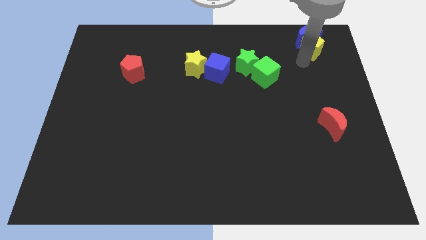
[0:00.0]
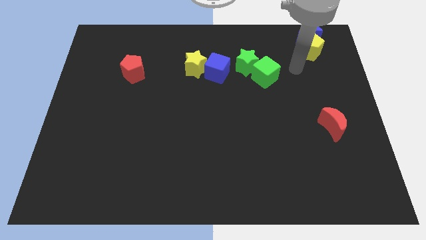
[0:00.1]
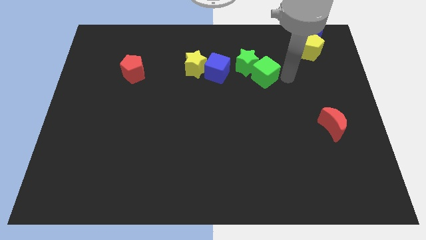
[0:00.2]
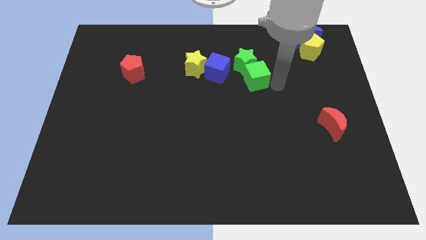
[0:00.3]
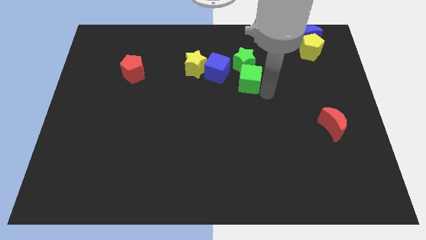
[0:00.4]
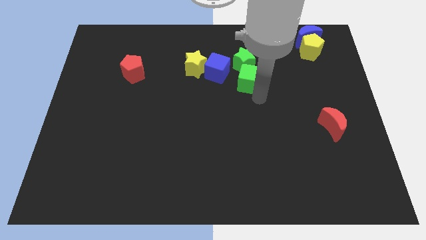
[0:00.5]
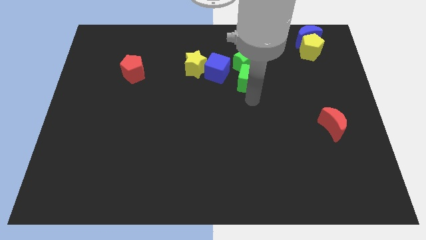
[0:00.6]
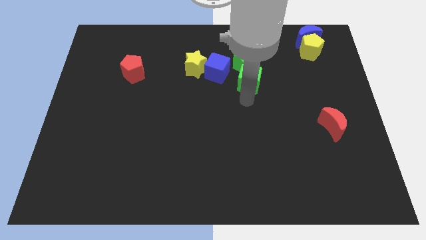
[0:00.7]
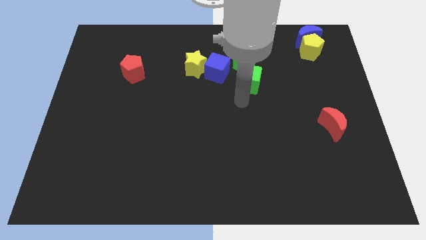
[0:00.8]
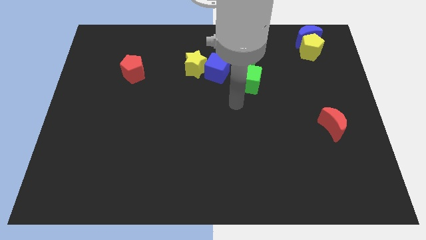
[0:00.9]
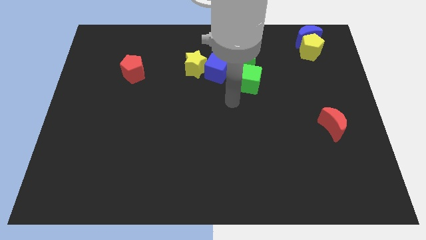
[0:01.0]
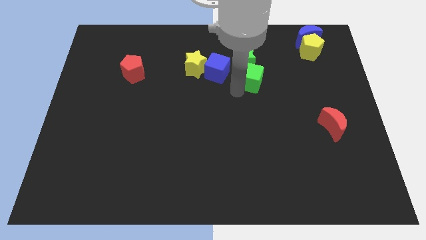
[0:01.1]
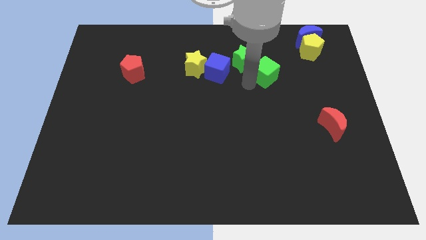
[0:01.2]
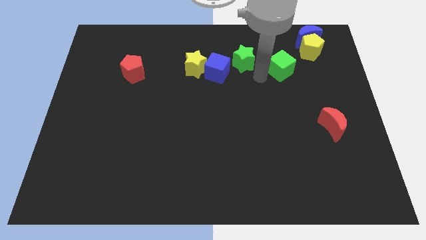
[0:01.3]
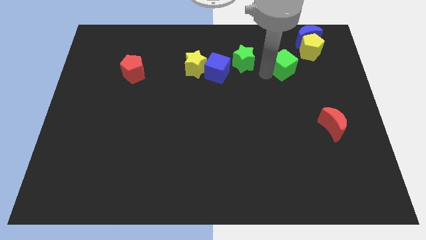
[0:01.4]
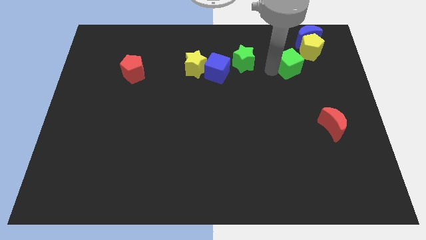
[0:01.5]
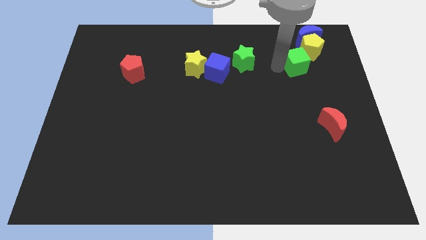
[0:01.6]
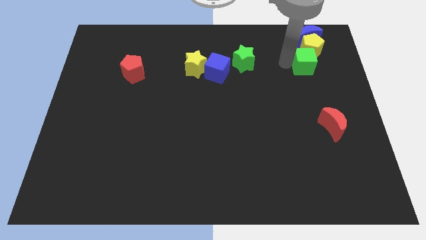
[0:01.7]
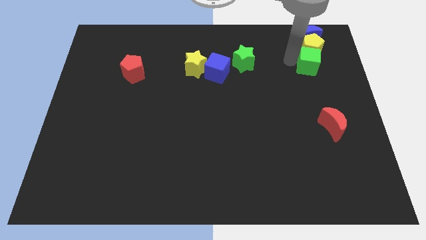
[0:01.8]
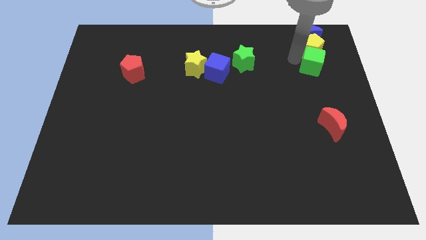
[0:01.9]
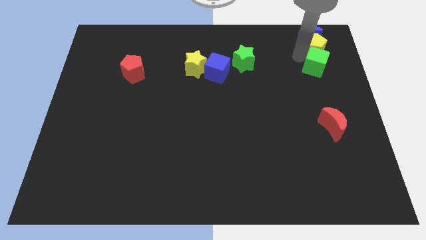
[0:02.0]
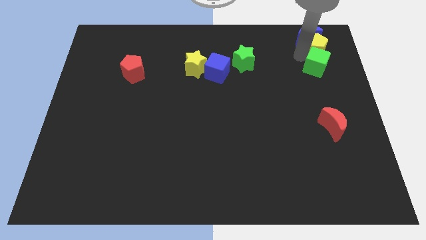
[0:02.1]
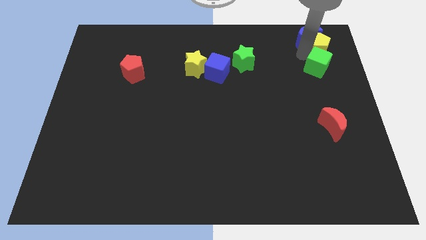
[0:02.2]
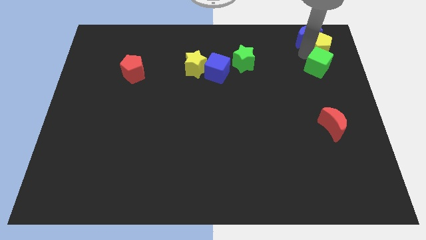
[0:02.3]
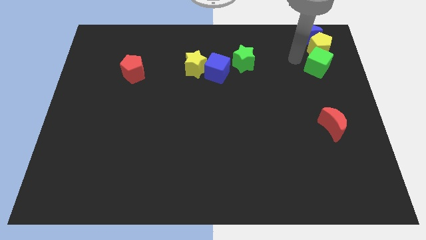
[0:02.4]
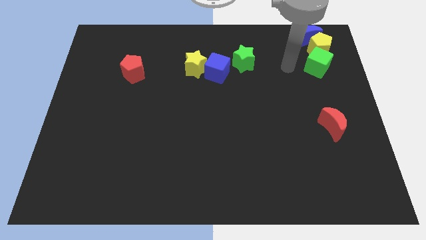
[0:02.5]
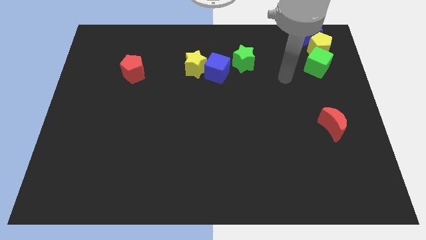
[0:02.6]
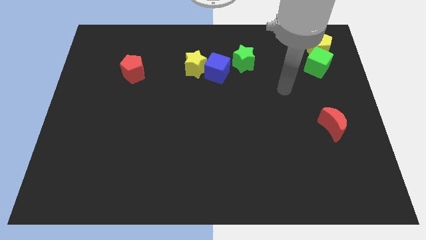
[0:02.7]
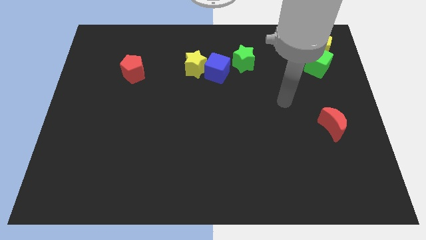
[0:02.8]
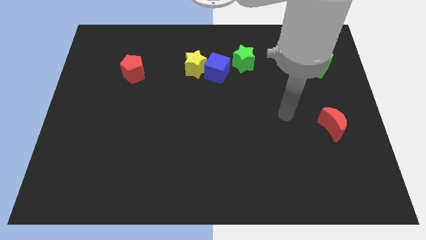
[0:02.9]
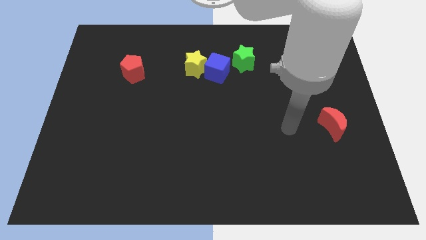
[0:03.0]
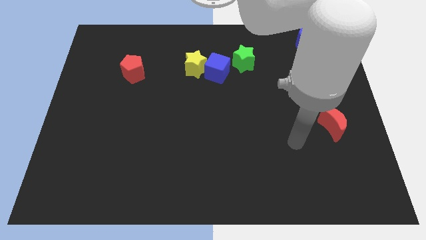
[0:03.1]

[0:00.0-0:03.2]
separate green cube and green star

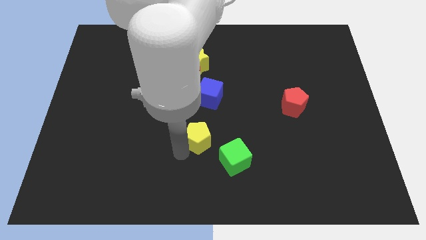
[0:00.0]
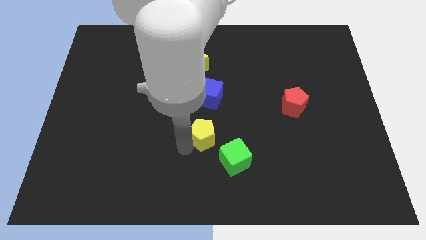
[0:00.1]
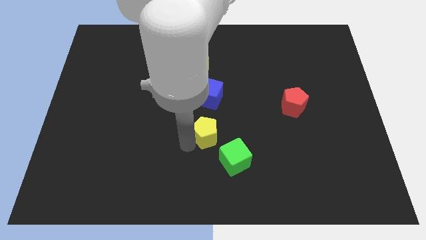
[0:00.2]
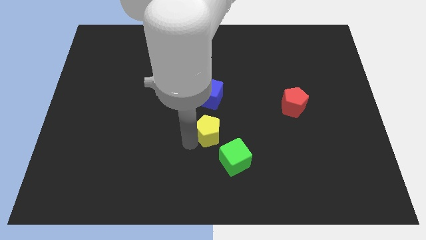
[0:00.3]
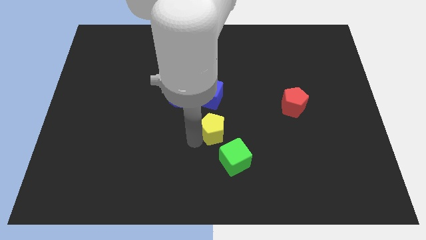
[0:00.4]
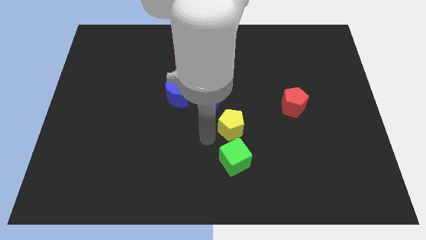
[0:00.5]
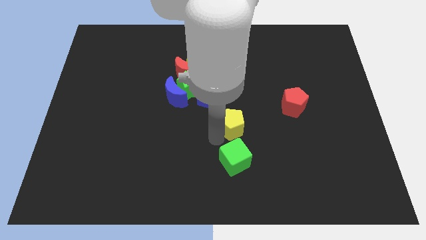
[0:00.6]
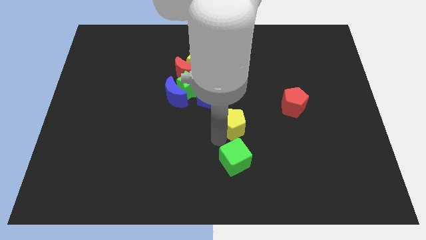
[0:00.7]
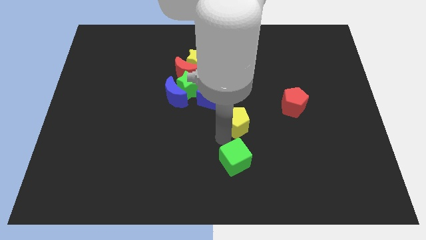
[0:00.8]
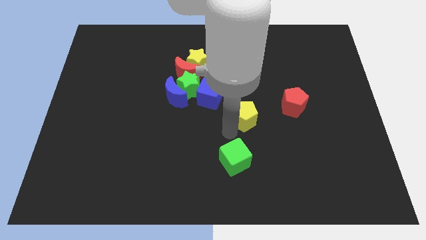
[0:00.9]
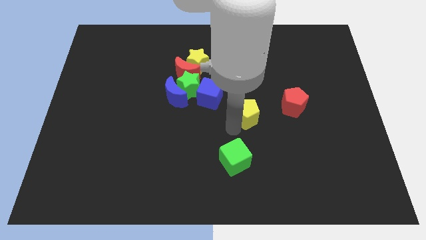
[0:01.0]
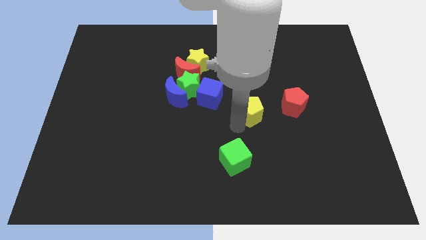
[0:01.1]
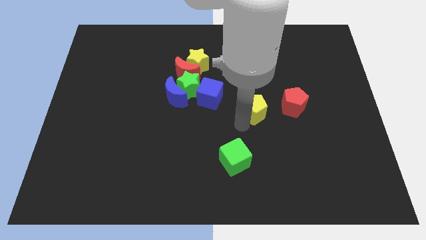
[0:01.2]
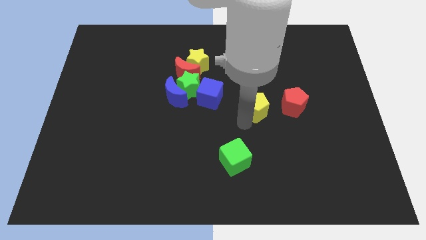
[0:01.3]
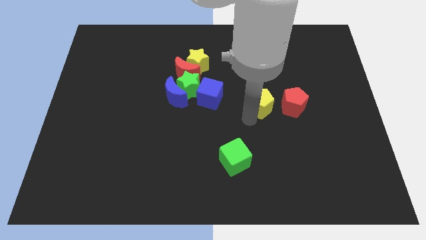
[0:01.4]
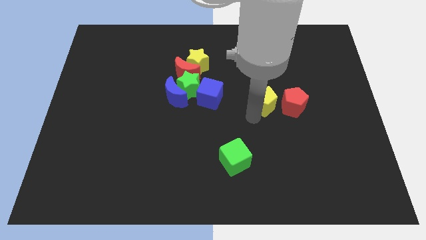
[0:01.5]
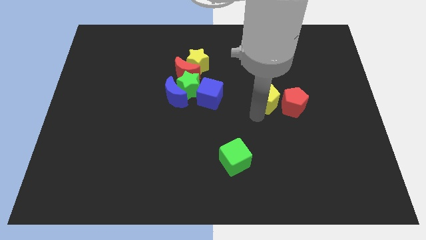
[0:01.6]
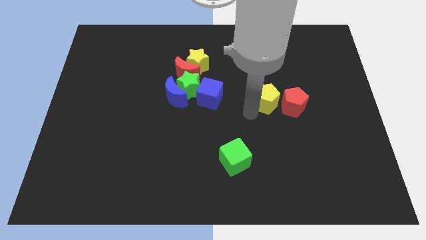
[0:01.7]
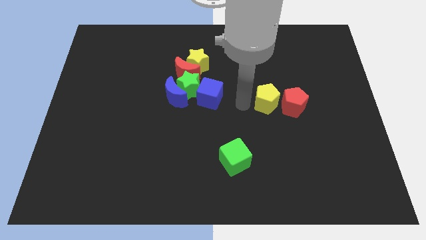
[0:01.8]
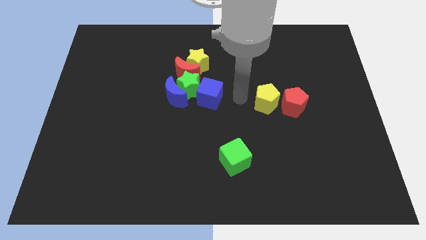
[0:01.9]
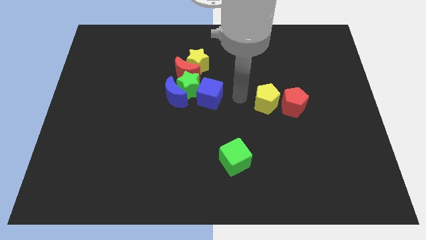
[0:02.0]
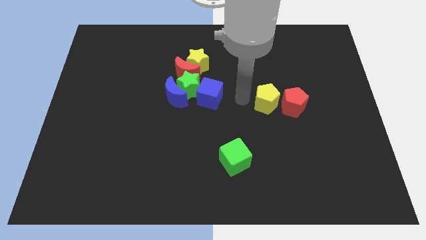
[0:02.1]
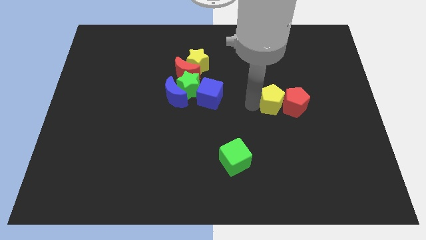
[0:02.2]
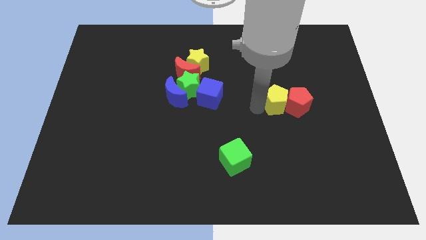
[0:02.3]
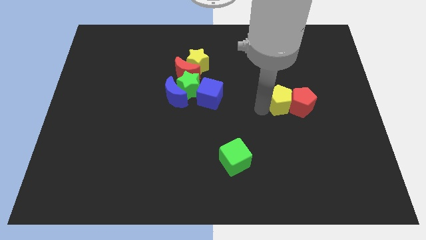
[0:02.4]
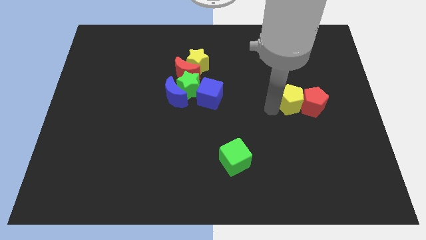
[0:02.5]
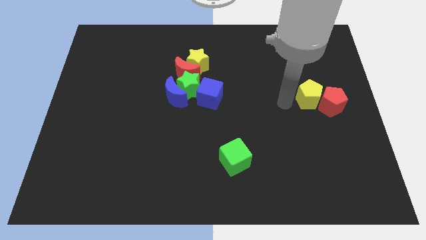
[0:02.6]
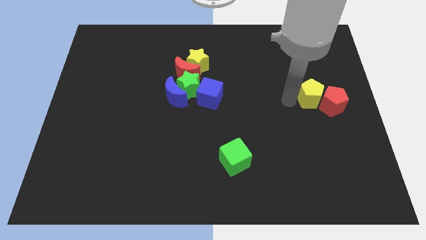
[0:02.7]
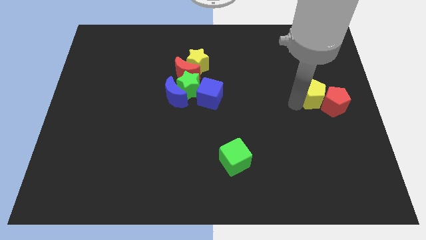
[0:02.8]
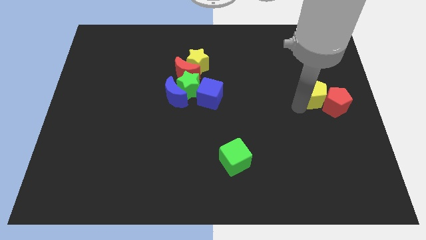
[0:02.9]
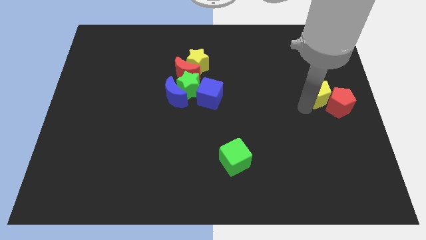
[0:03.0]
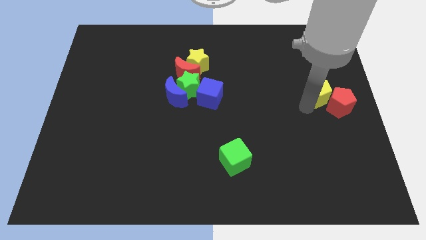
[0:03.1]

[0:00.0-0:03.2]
move the yellow pentagon into red pentagon

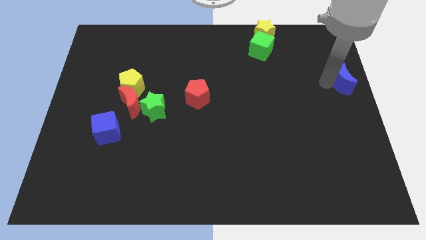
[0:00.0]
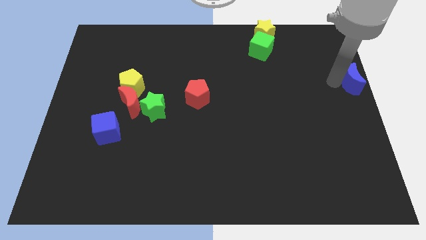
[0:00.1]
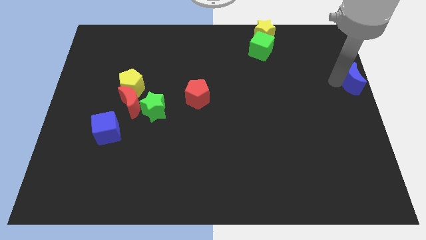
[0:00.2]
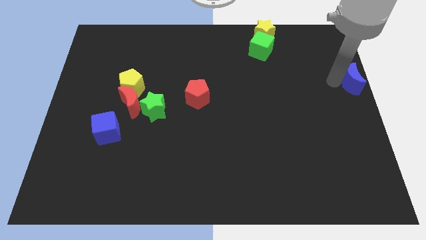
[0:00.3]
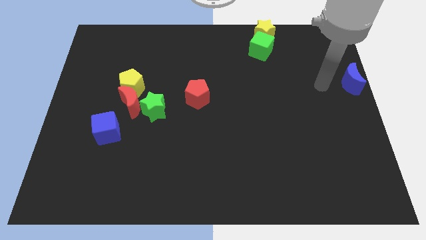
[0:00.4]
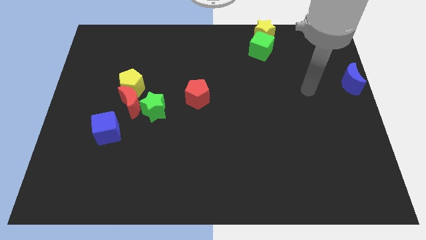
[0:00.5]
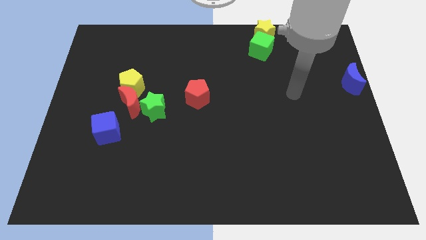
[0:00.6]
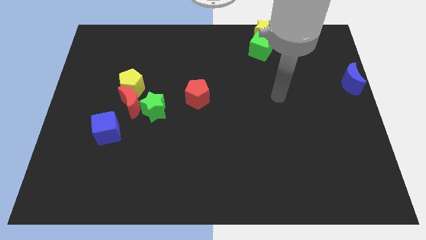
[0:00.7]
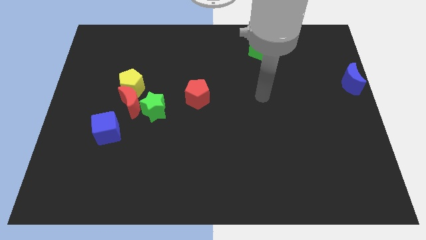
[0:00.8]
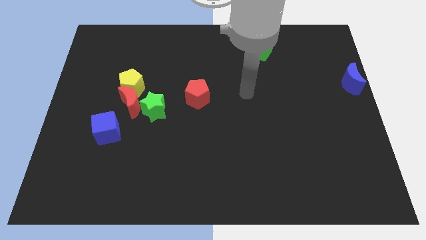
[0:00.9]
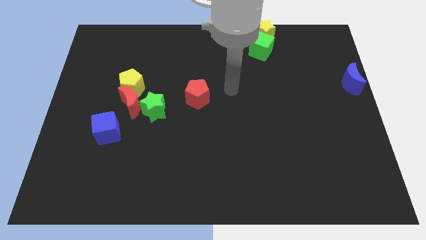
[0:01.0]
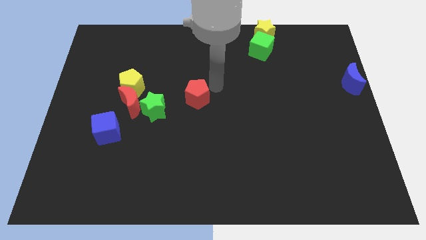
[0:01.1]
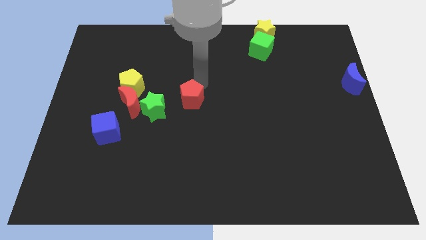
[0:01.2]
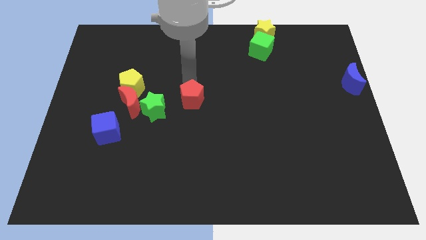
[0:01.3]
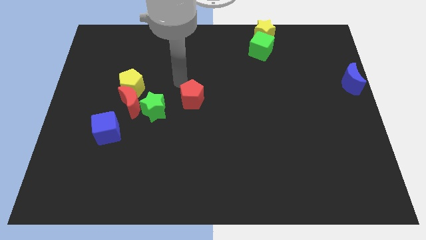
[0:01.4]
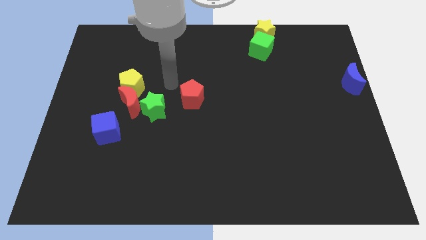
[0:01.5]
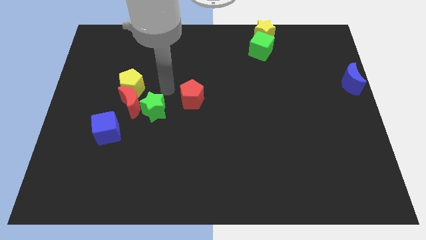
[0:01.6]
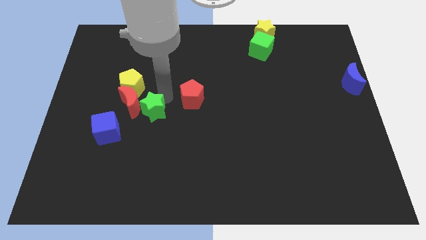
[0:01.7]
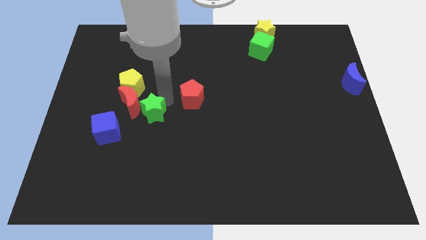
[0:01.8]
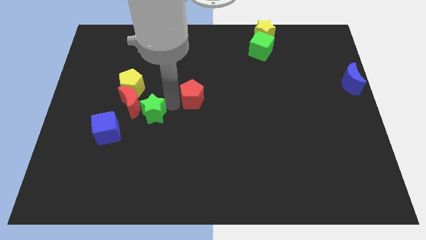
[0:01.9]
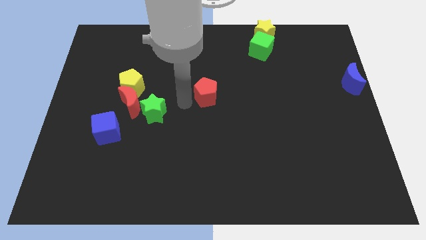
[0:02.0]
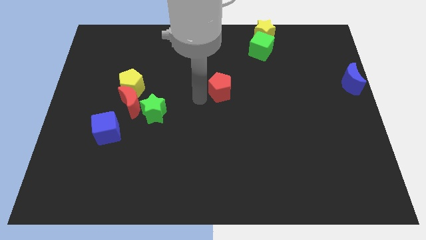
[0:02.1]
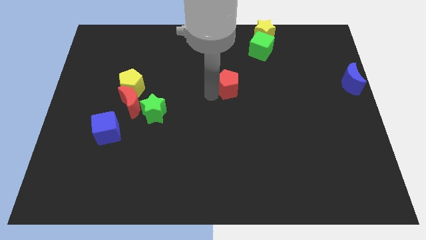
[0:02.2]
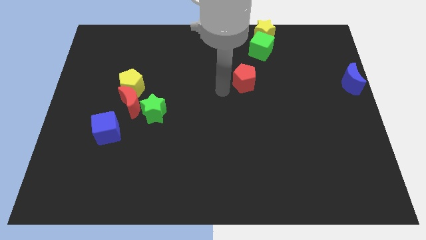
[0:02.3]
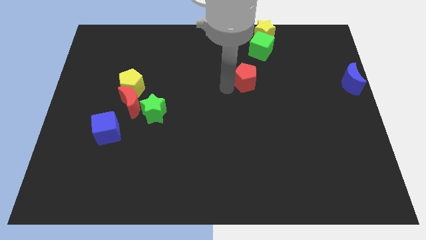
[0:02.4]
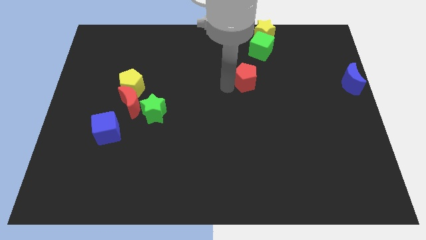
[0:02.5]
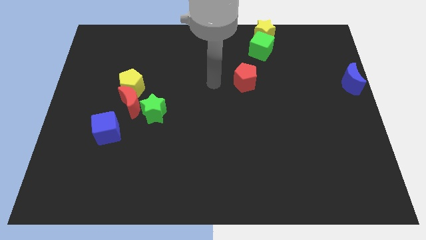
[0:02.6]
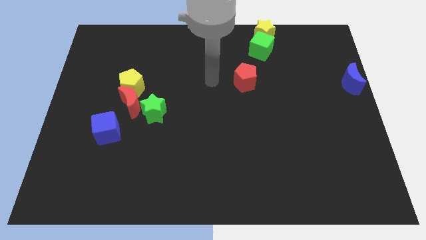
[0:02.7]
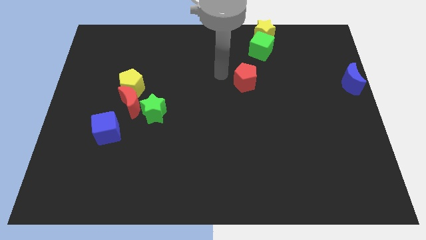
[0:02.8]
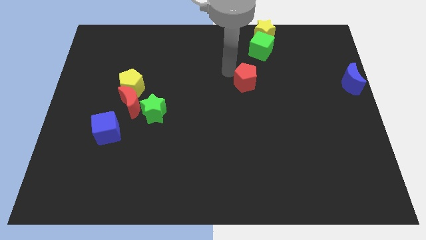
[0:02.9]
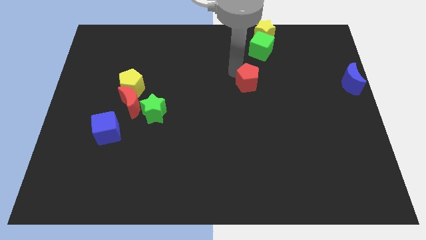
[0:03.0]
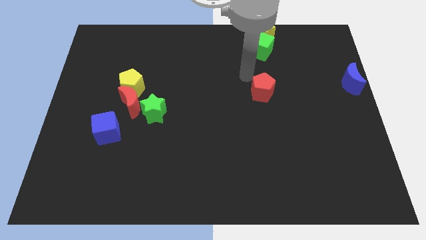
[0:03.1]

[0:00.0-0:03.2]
put the red pentagon vertically below to the green cube
